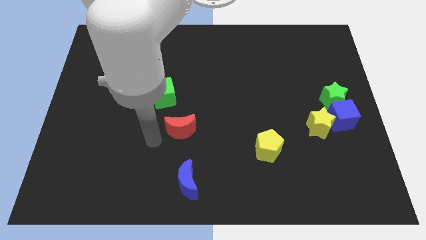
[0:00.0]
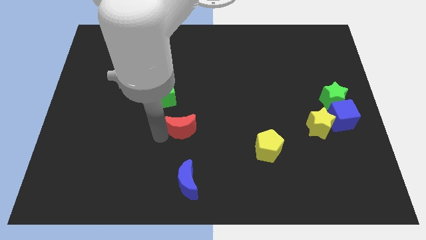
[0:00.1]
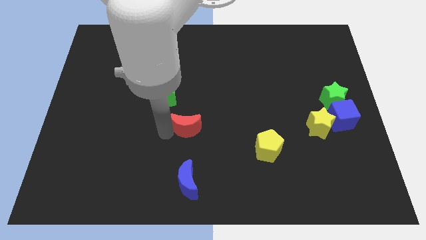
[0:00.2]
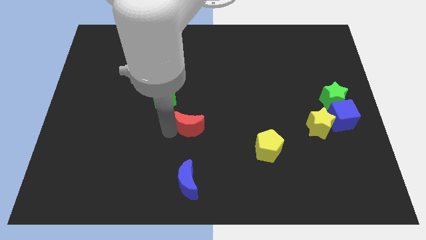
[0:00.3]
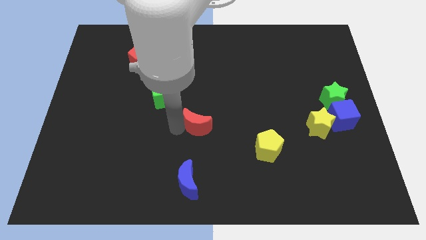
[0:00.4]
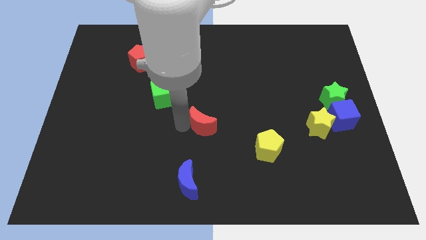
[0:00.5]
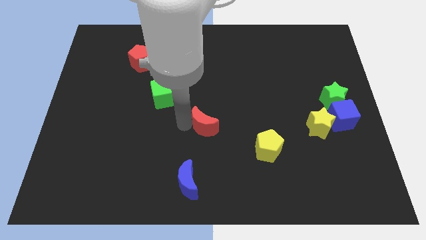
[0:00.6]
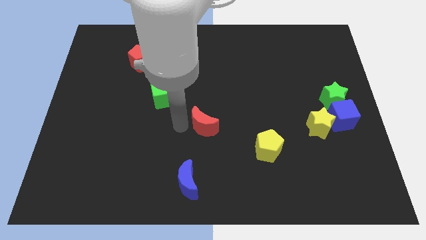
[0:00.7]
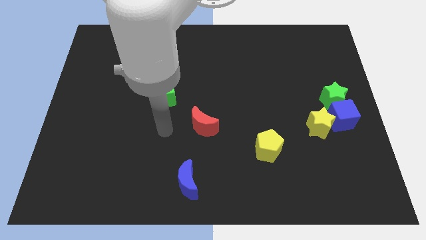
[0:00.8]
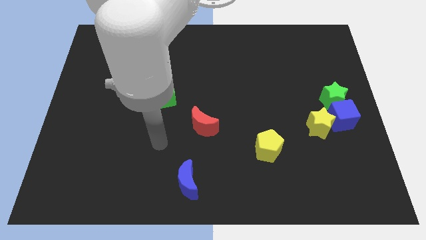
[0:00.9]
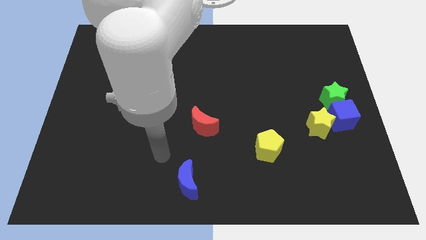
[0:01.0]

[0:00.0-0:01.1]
place the red crescent in between the yellow pentagon and green cube

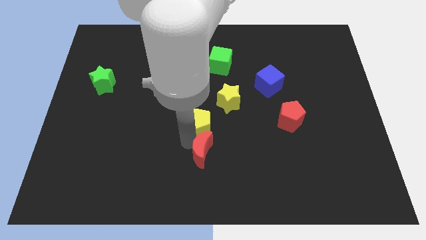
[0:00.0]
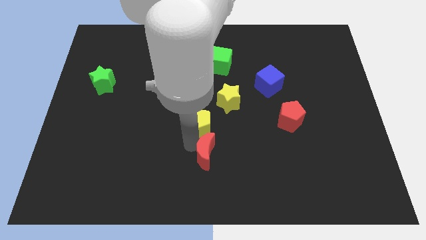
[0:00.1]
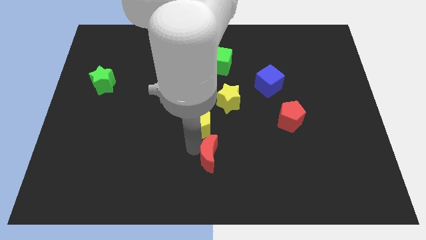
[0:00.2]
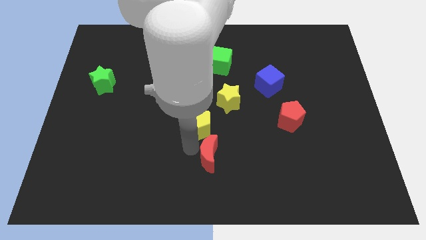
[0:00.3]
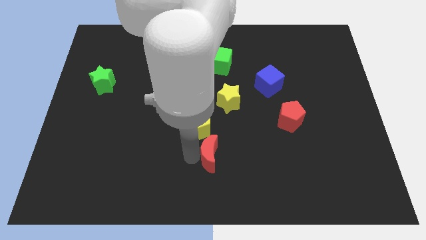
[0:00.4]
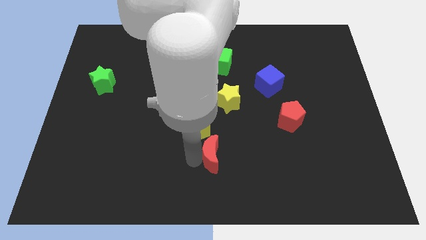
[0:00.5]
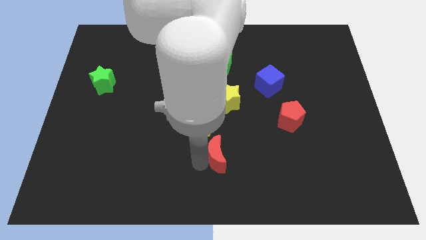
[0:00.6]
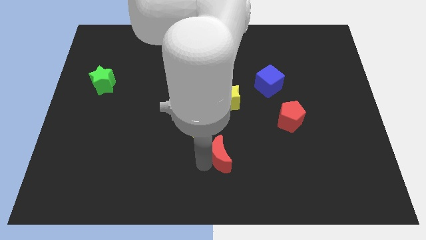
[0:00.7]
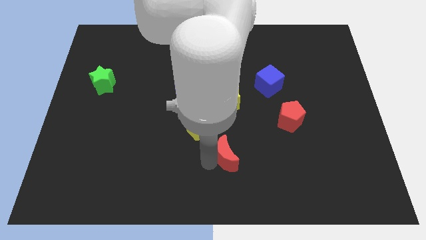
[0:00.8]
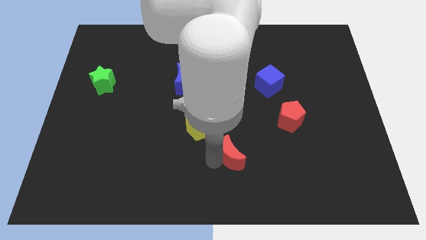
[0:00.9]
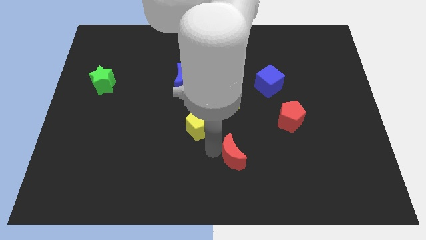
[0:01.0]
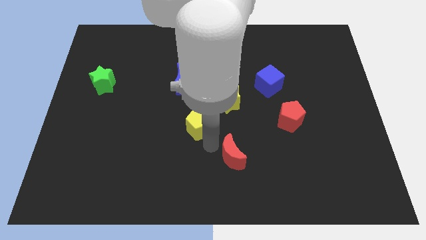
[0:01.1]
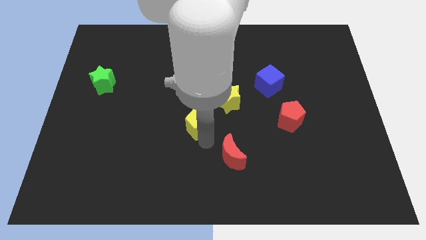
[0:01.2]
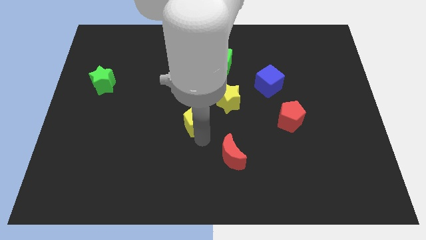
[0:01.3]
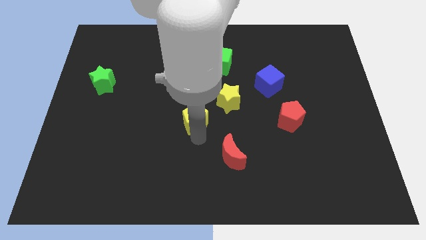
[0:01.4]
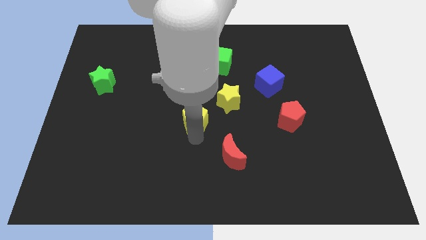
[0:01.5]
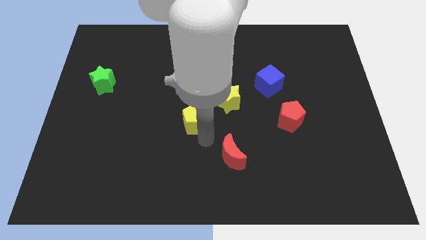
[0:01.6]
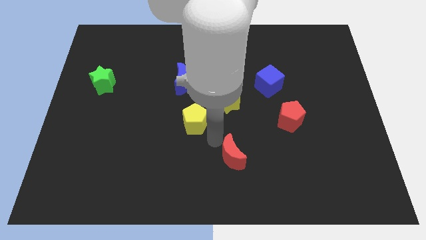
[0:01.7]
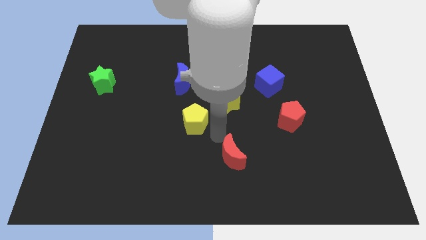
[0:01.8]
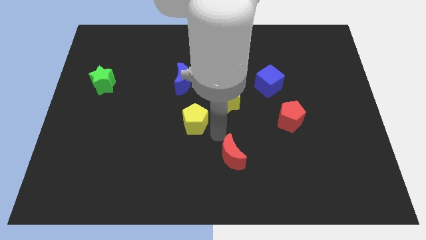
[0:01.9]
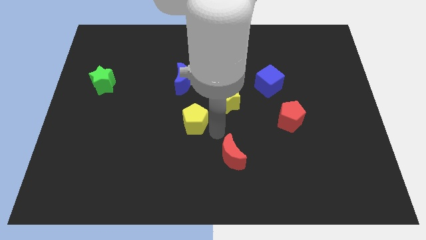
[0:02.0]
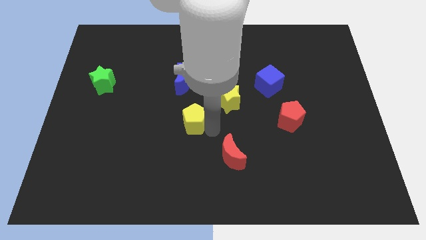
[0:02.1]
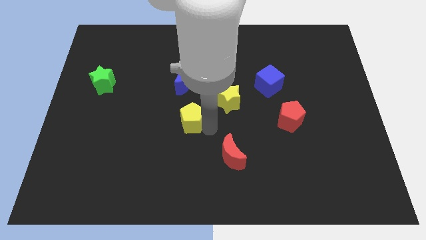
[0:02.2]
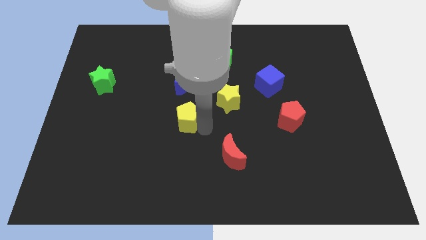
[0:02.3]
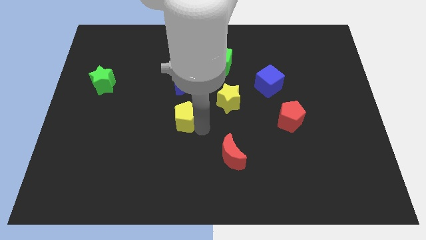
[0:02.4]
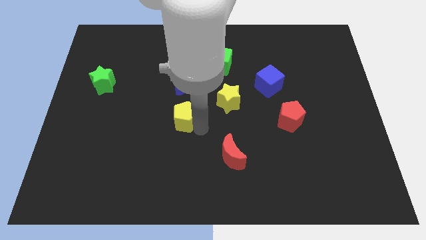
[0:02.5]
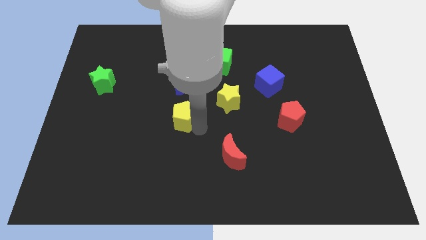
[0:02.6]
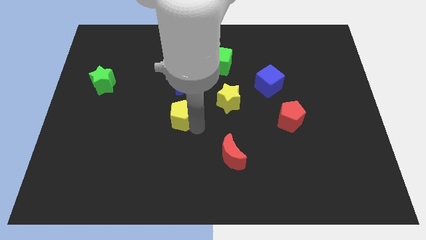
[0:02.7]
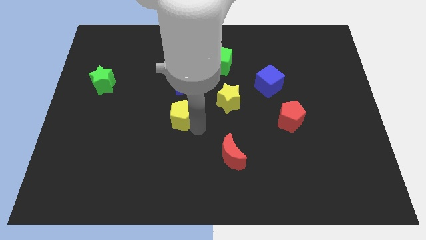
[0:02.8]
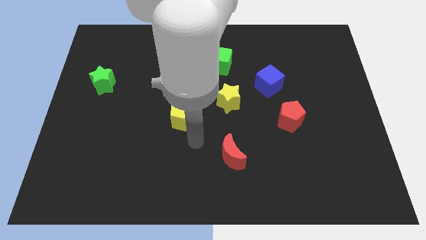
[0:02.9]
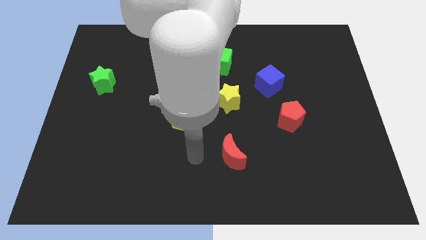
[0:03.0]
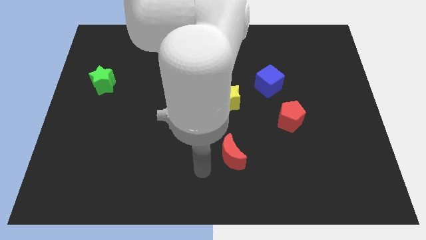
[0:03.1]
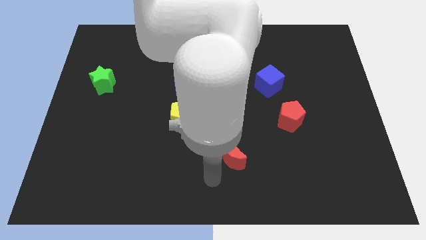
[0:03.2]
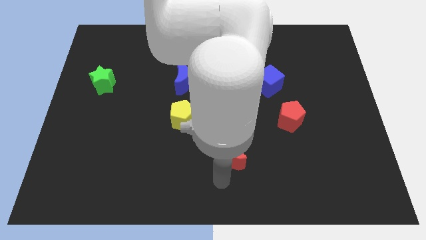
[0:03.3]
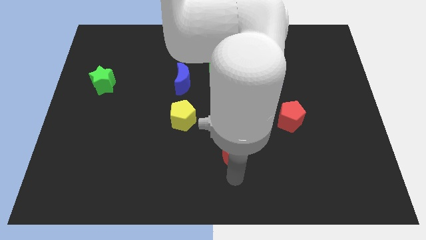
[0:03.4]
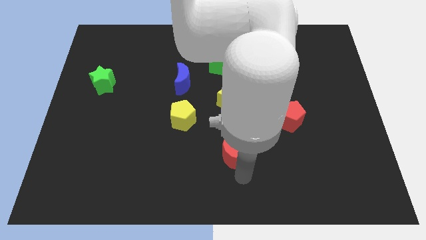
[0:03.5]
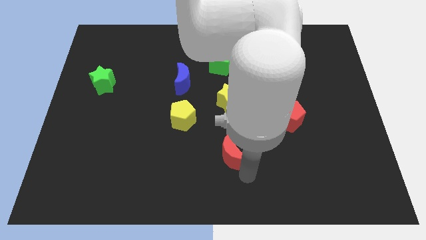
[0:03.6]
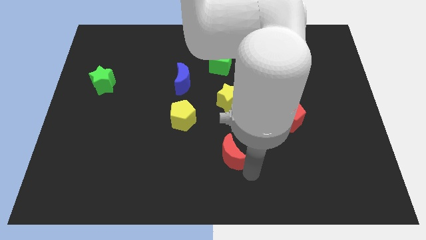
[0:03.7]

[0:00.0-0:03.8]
place the yellow pentagon bottom left to the yellow star

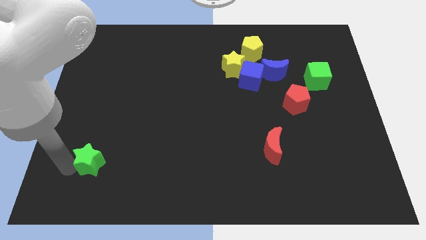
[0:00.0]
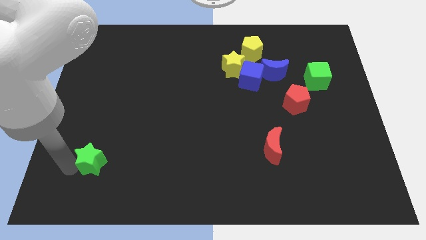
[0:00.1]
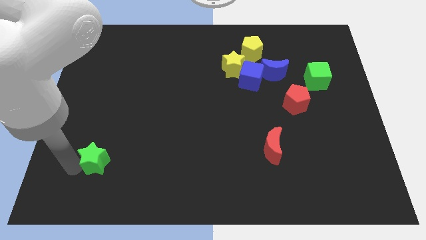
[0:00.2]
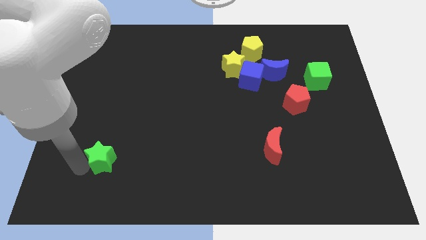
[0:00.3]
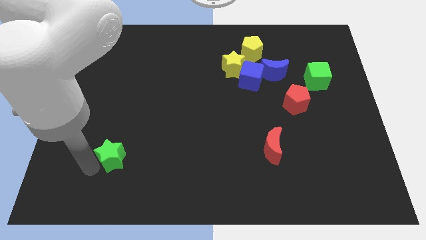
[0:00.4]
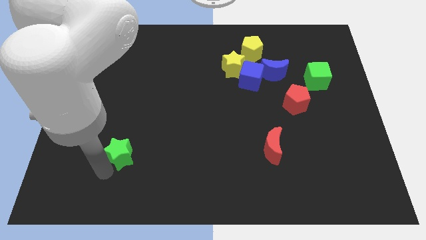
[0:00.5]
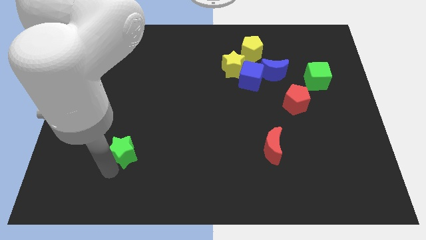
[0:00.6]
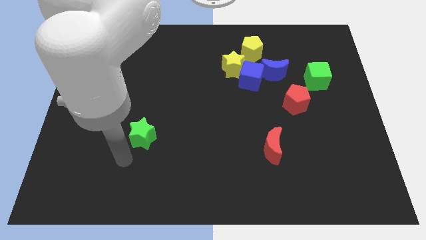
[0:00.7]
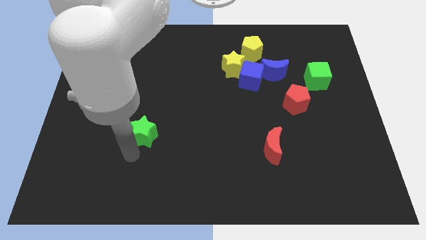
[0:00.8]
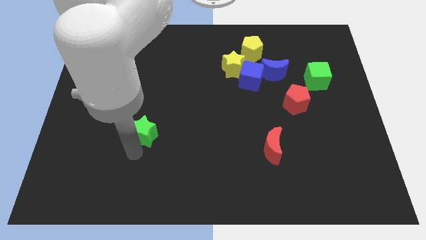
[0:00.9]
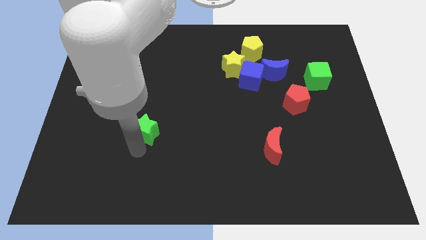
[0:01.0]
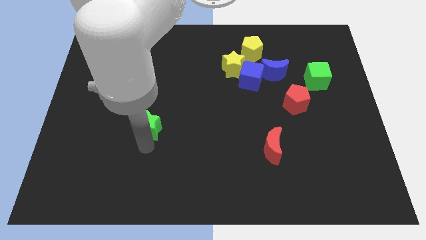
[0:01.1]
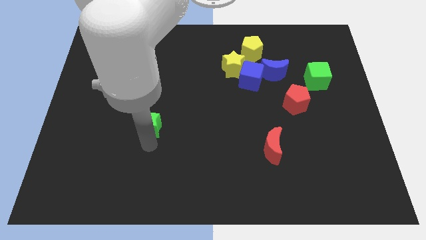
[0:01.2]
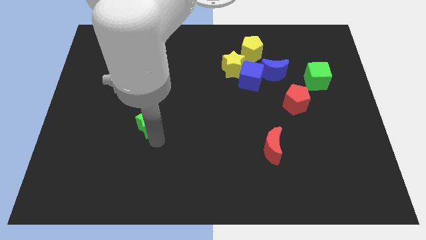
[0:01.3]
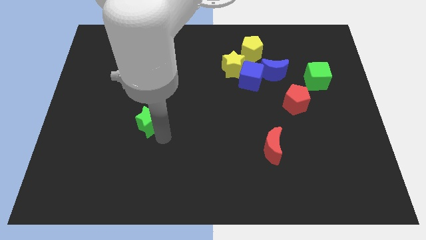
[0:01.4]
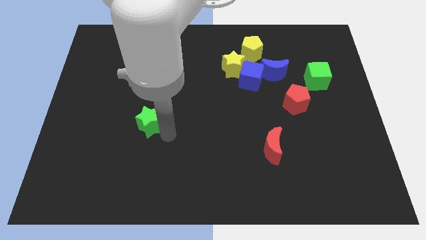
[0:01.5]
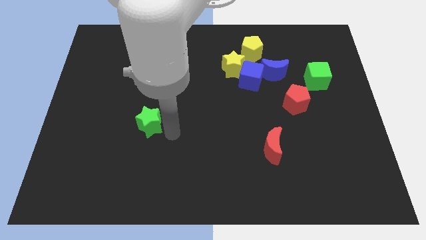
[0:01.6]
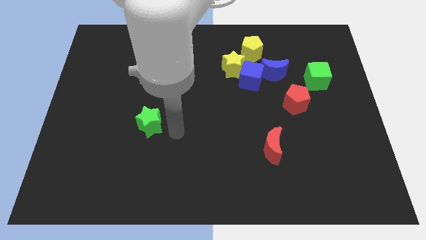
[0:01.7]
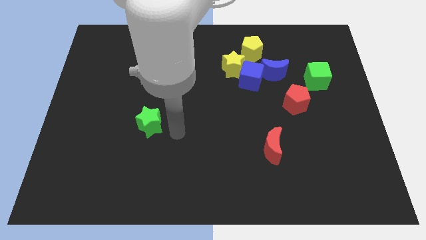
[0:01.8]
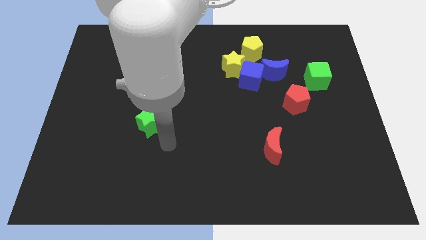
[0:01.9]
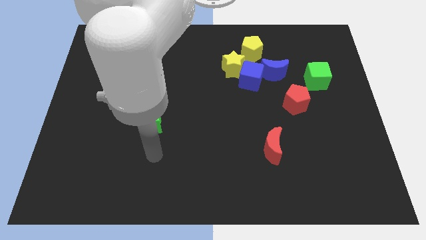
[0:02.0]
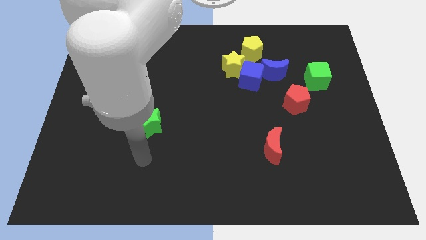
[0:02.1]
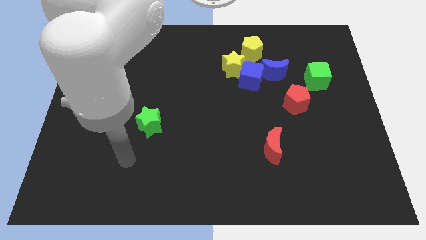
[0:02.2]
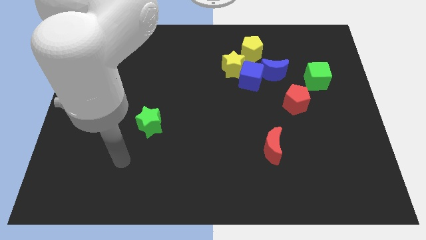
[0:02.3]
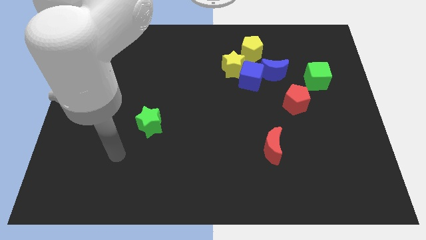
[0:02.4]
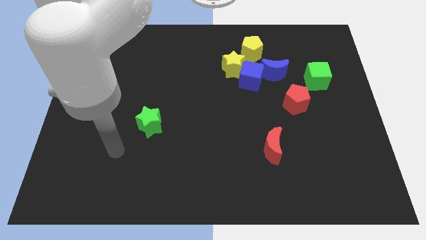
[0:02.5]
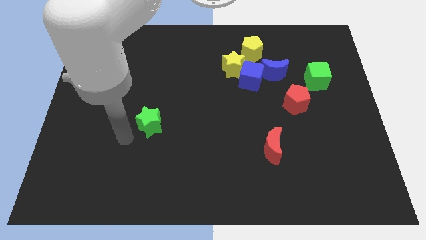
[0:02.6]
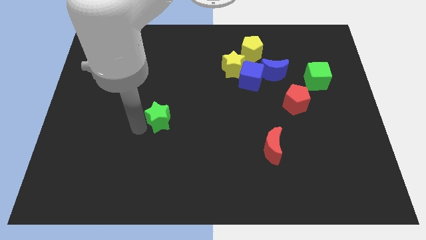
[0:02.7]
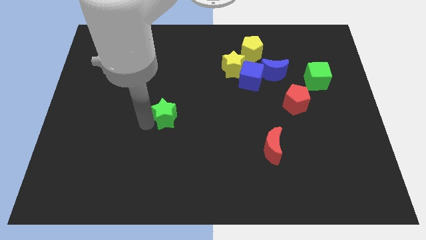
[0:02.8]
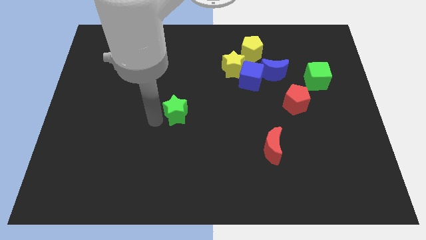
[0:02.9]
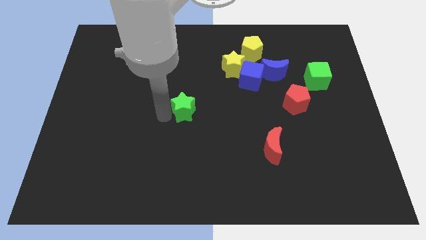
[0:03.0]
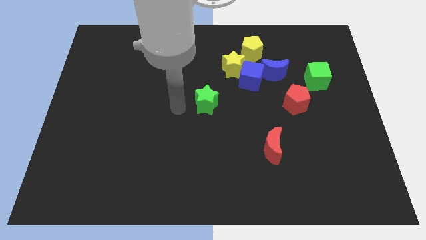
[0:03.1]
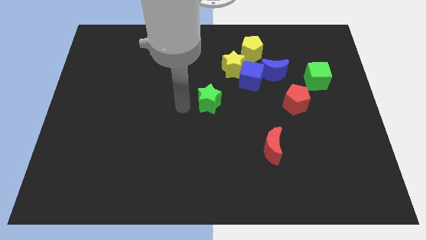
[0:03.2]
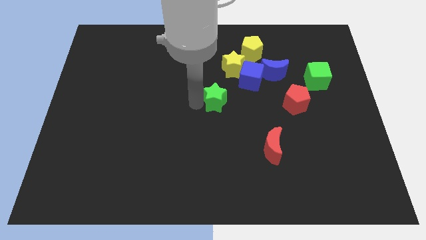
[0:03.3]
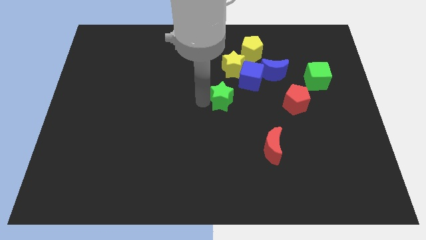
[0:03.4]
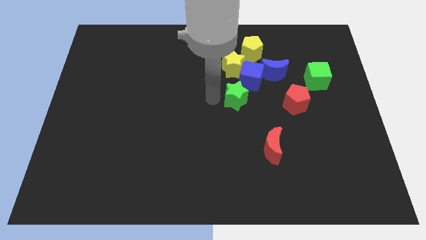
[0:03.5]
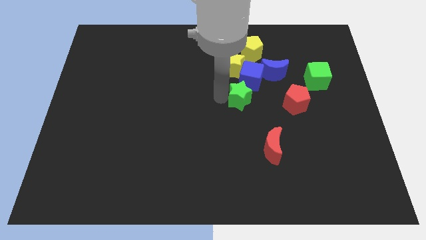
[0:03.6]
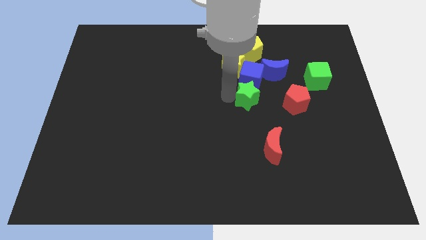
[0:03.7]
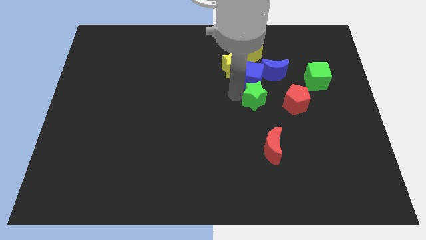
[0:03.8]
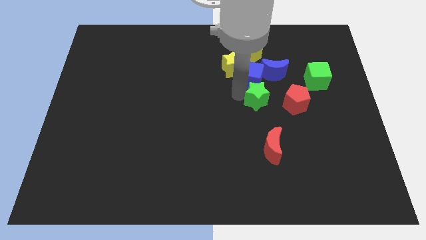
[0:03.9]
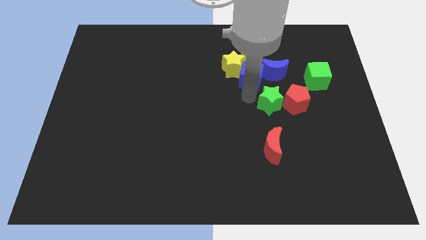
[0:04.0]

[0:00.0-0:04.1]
push the green star to the left of the red pentagon
